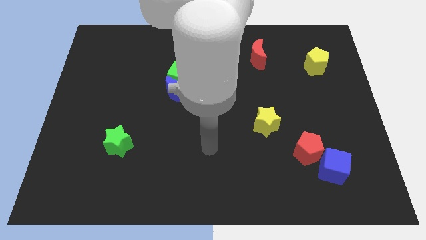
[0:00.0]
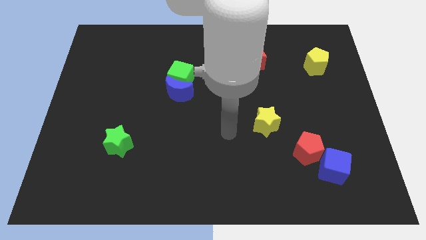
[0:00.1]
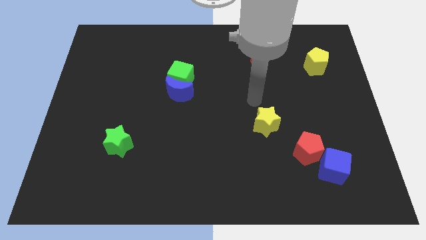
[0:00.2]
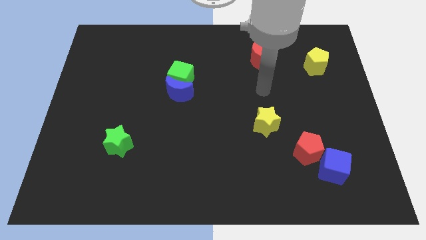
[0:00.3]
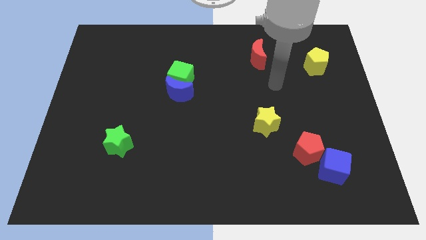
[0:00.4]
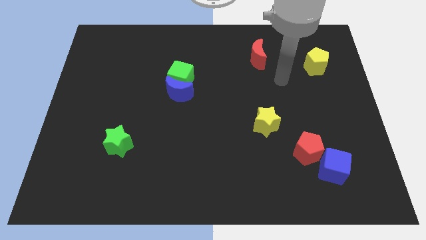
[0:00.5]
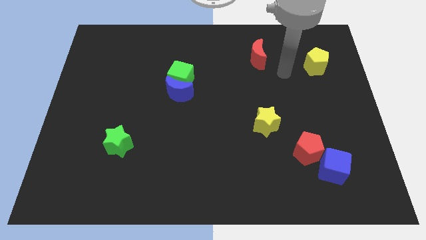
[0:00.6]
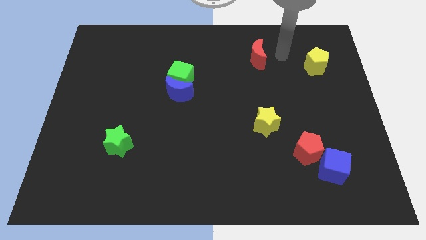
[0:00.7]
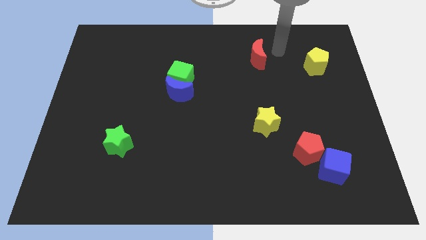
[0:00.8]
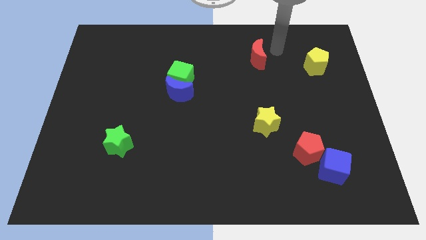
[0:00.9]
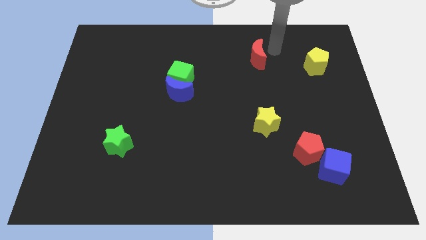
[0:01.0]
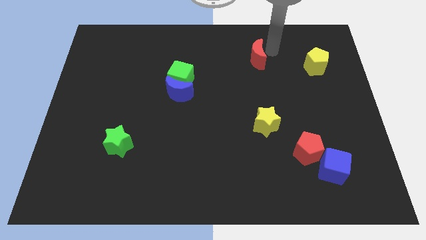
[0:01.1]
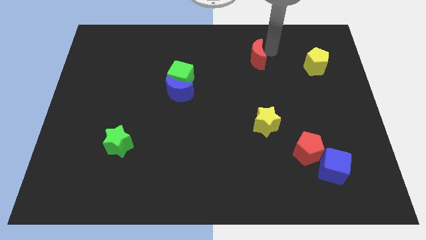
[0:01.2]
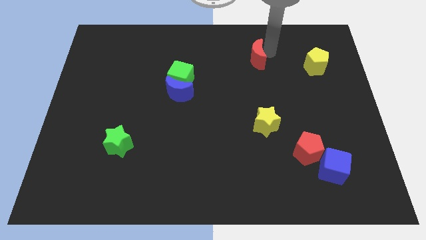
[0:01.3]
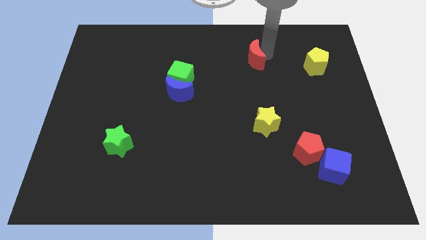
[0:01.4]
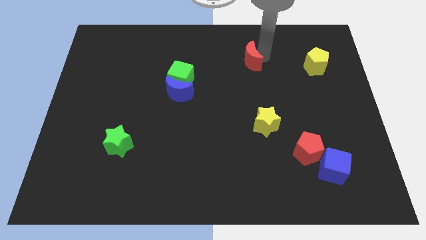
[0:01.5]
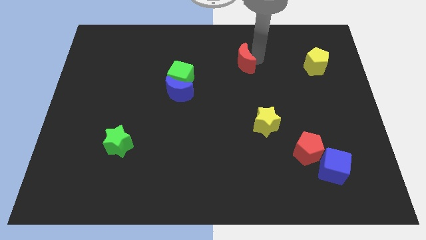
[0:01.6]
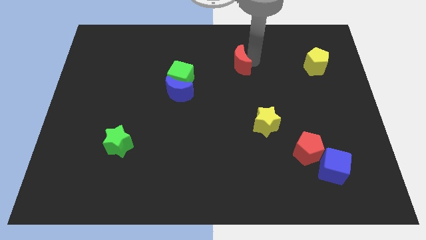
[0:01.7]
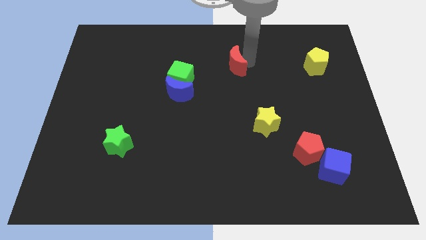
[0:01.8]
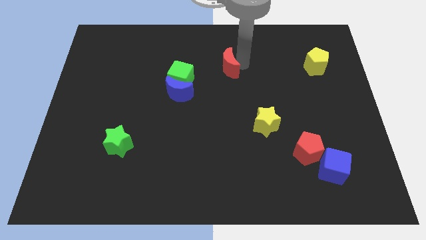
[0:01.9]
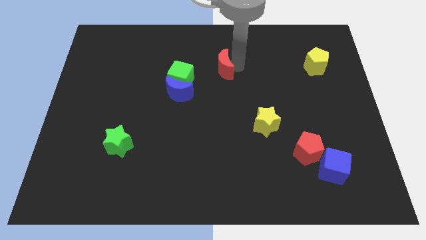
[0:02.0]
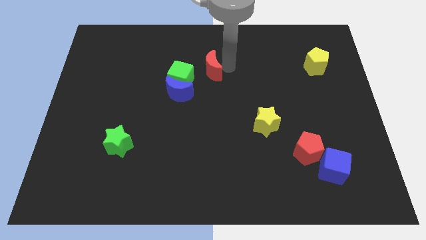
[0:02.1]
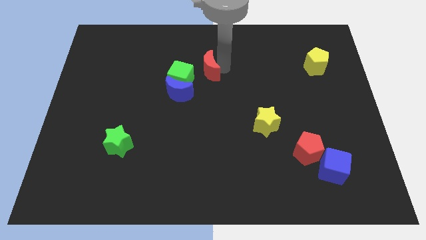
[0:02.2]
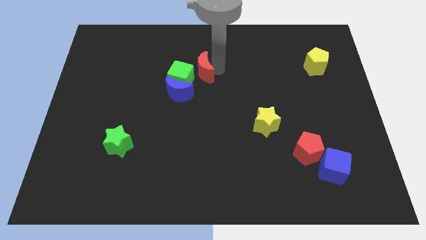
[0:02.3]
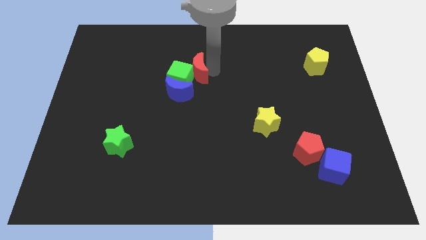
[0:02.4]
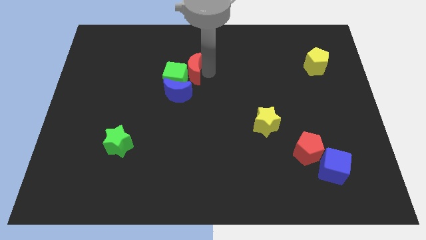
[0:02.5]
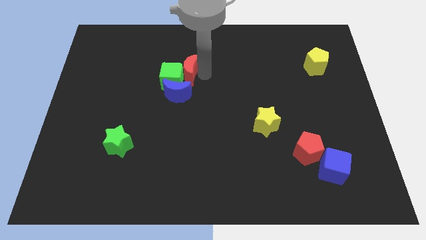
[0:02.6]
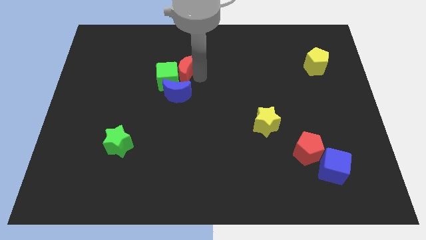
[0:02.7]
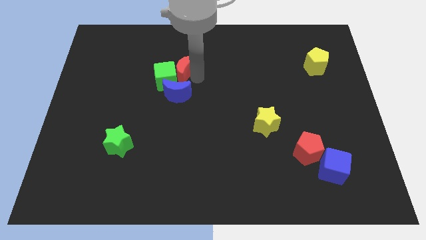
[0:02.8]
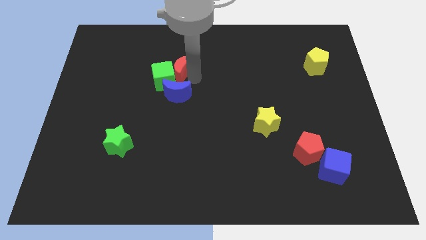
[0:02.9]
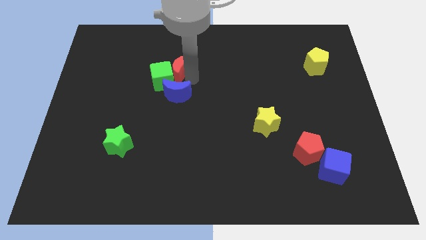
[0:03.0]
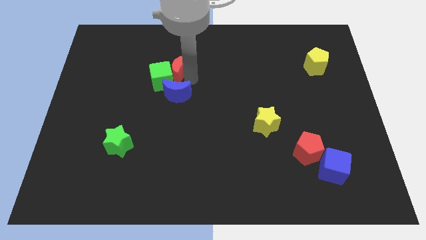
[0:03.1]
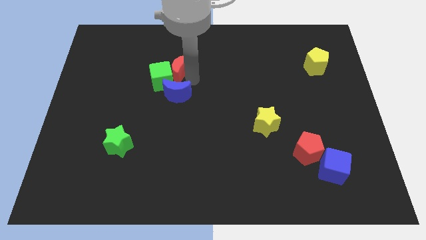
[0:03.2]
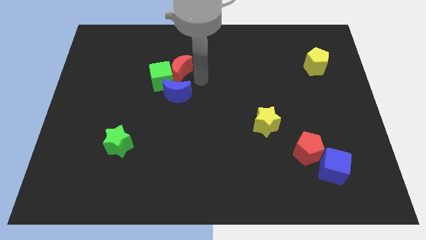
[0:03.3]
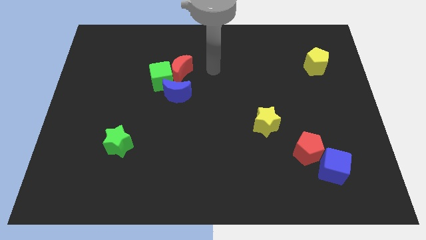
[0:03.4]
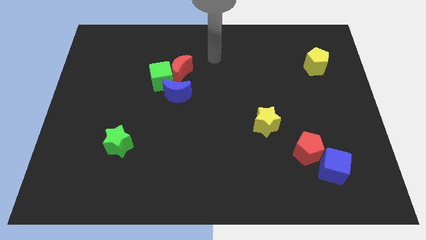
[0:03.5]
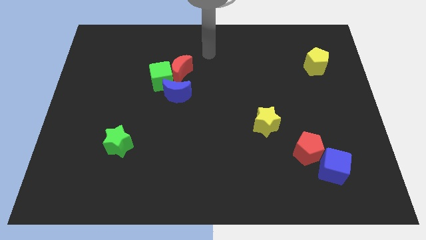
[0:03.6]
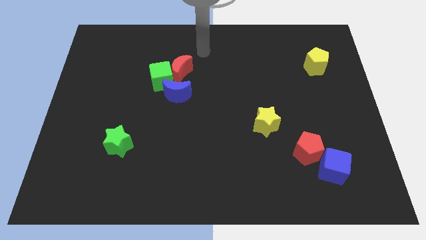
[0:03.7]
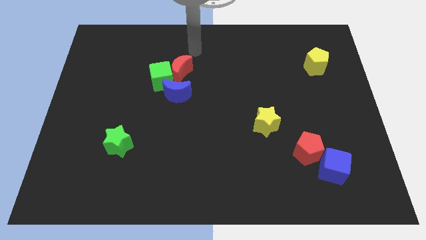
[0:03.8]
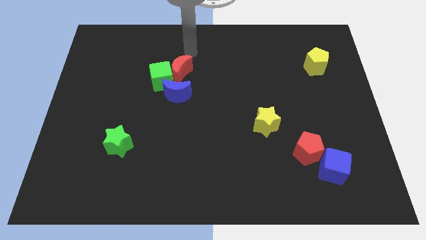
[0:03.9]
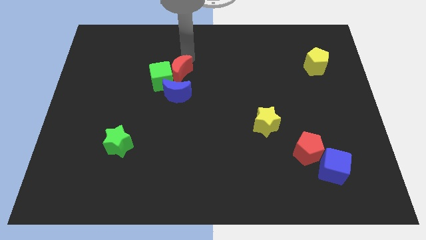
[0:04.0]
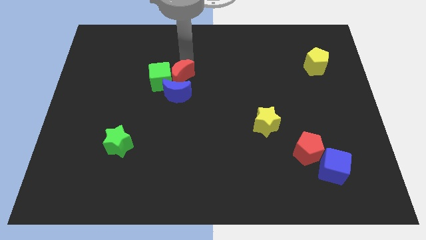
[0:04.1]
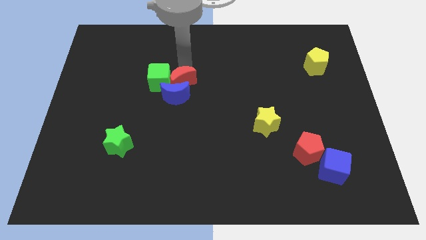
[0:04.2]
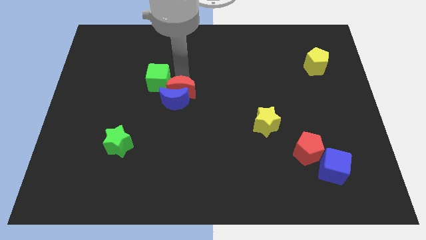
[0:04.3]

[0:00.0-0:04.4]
move the red moon to the blue moon

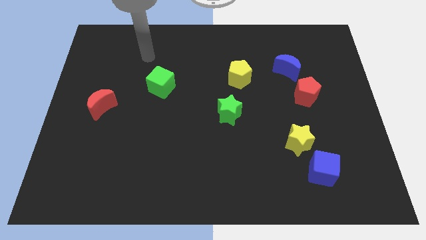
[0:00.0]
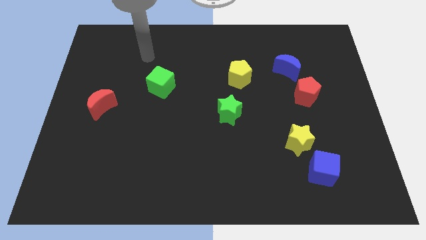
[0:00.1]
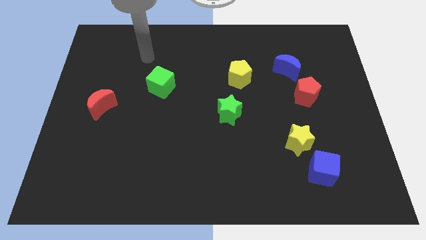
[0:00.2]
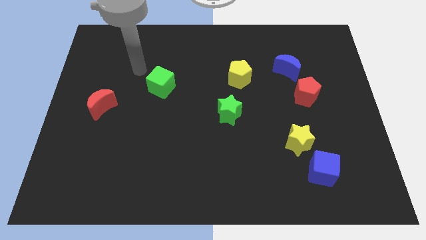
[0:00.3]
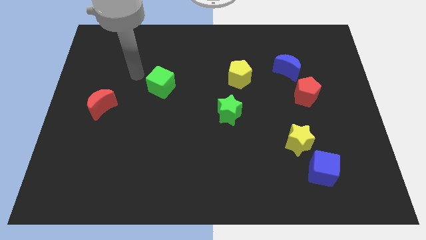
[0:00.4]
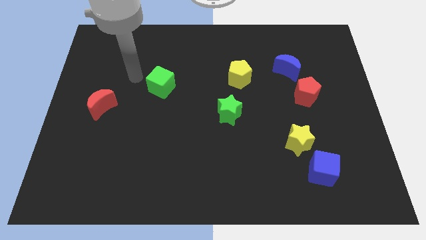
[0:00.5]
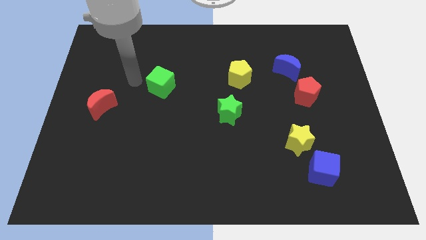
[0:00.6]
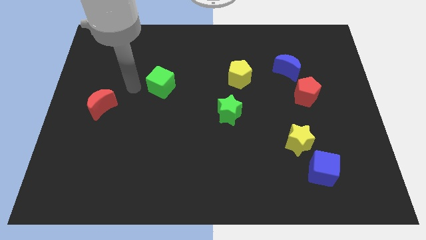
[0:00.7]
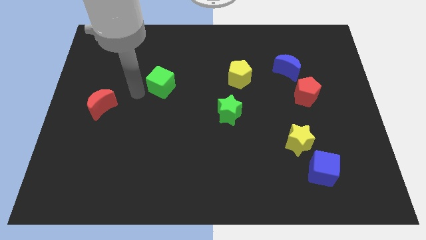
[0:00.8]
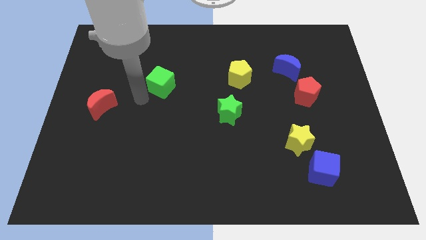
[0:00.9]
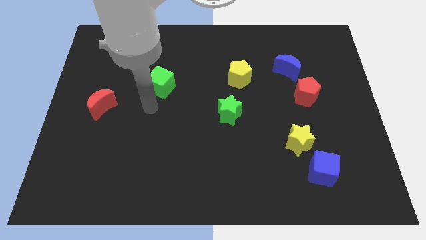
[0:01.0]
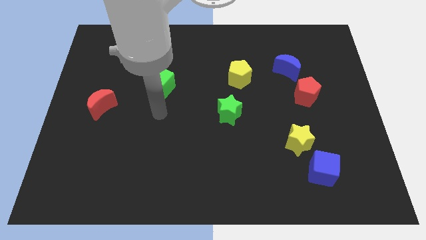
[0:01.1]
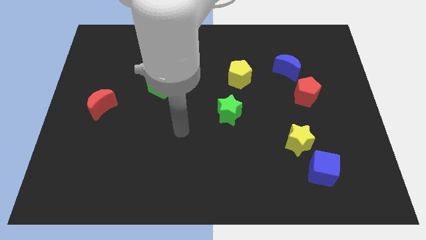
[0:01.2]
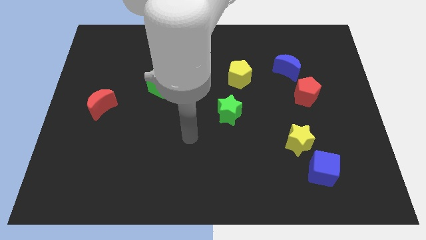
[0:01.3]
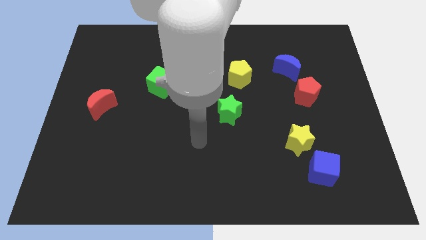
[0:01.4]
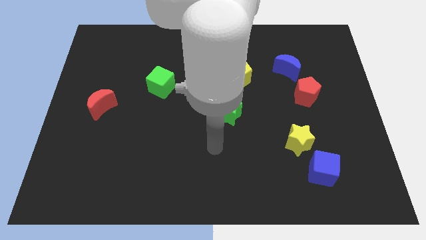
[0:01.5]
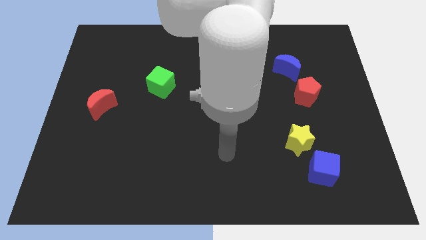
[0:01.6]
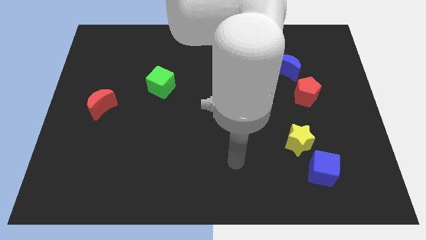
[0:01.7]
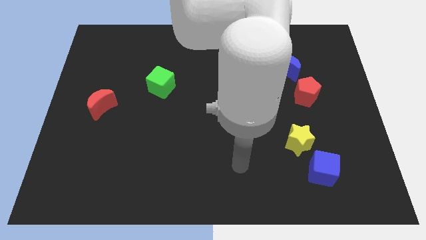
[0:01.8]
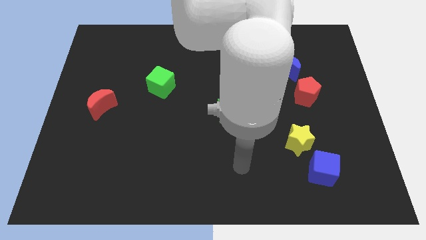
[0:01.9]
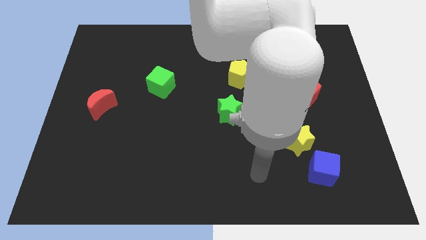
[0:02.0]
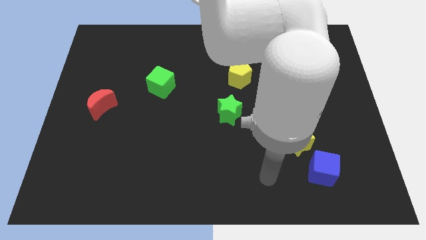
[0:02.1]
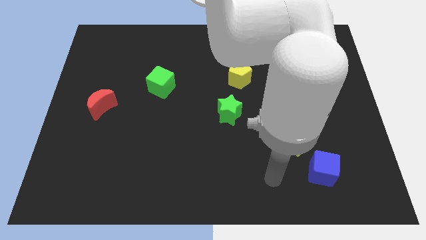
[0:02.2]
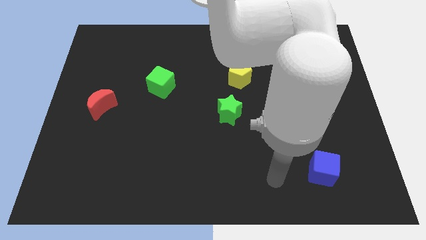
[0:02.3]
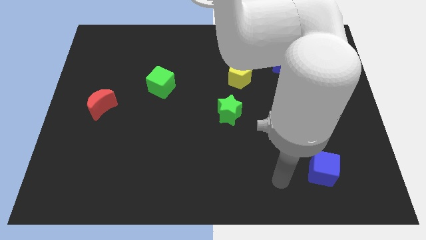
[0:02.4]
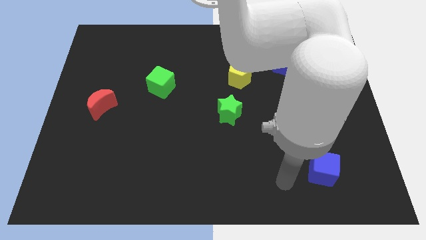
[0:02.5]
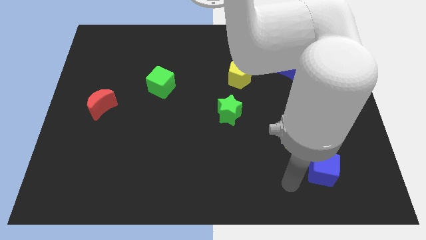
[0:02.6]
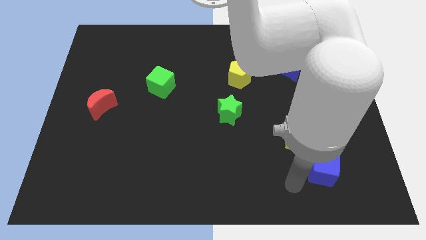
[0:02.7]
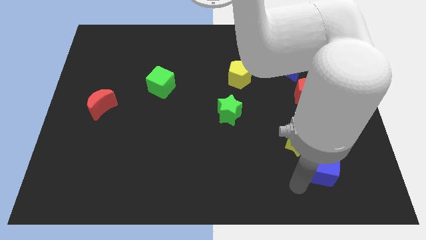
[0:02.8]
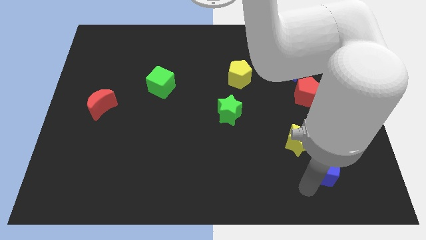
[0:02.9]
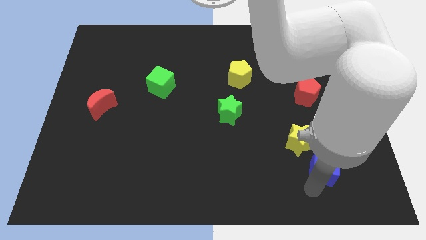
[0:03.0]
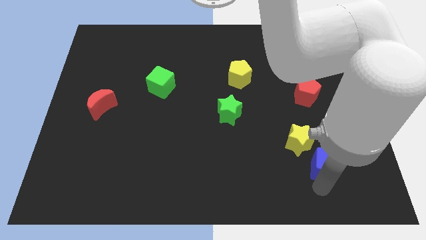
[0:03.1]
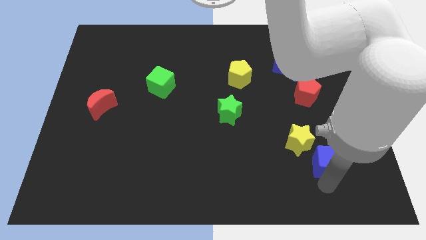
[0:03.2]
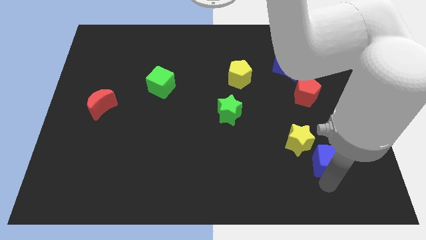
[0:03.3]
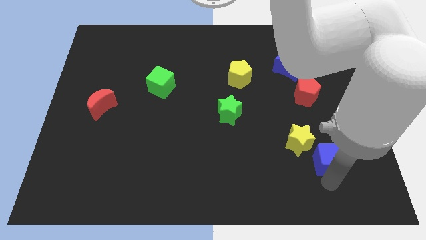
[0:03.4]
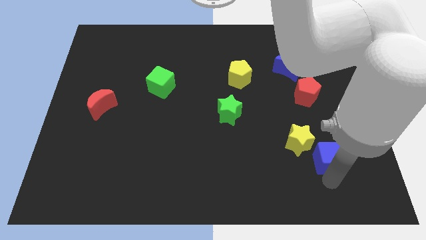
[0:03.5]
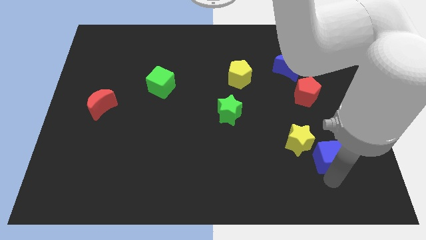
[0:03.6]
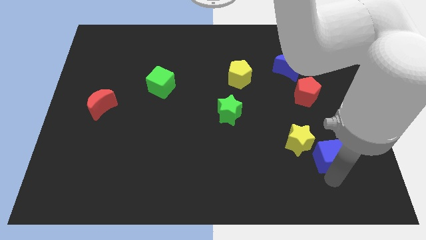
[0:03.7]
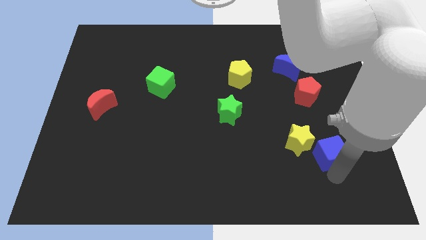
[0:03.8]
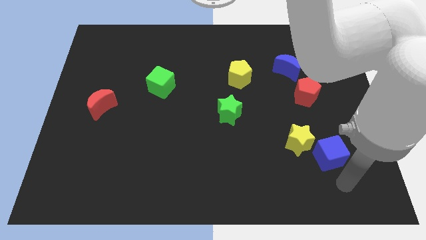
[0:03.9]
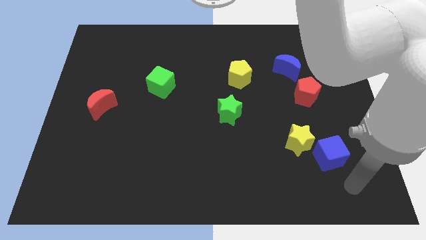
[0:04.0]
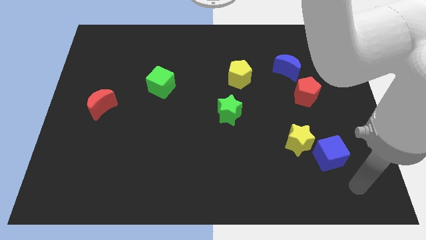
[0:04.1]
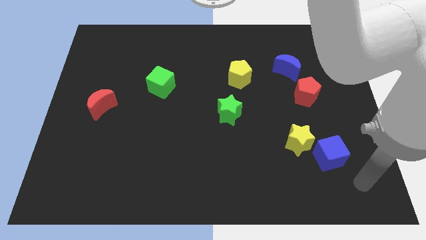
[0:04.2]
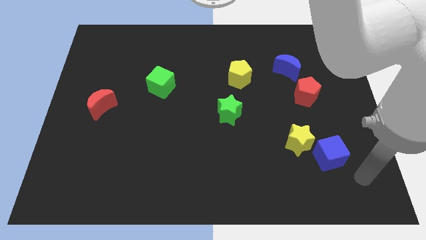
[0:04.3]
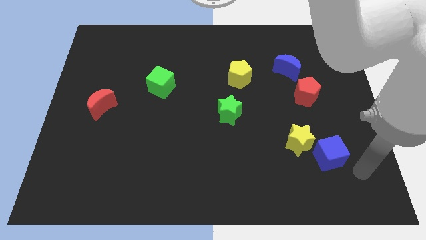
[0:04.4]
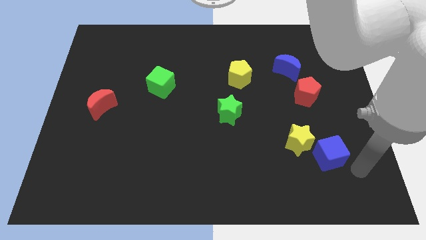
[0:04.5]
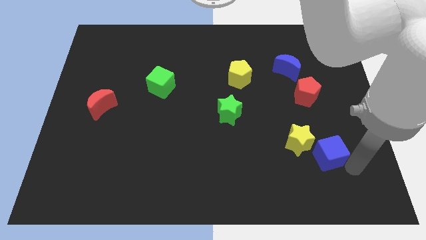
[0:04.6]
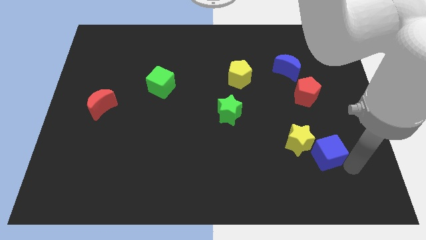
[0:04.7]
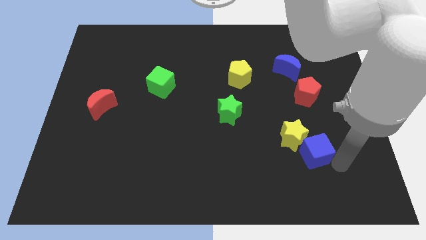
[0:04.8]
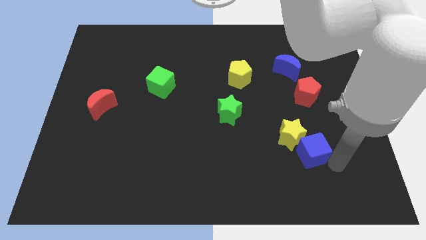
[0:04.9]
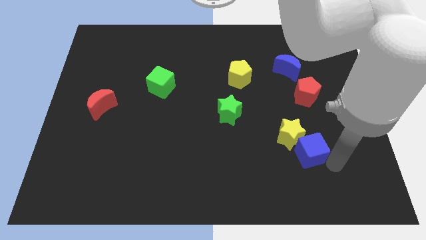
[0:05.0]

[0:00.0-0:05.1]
slide the blue cube towards the yellow star
